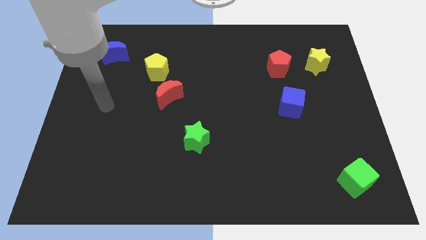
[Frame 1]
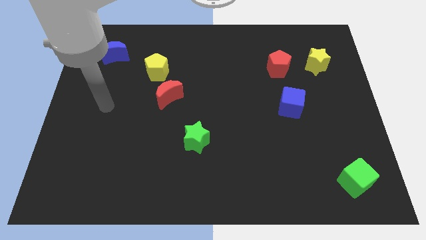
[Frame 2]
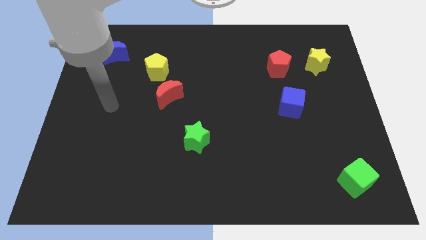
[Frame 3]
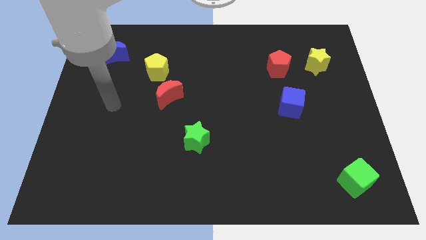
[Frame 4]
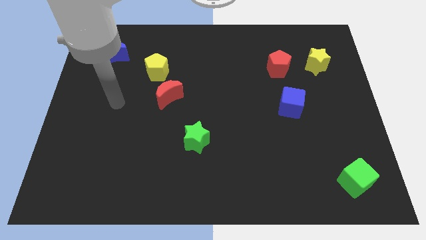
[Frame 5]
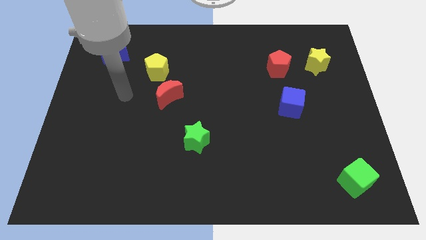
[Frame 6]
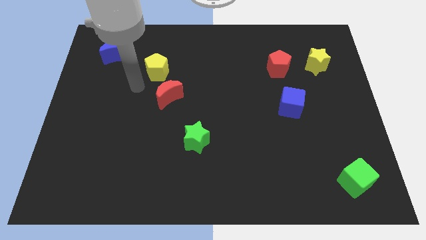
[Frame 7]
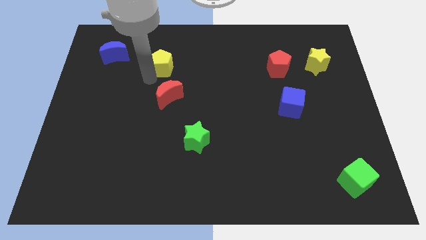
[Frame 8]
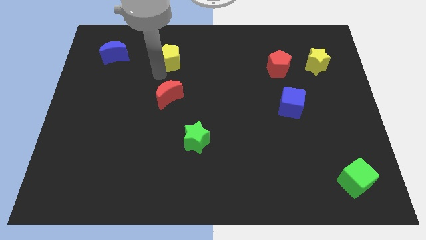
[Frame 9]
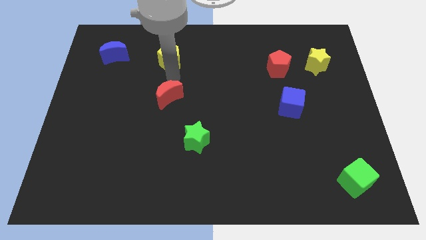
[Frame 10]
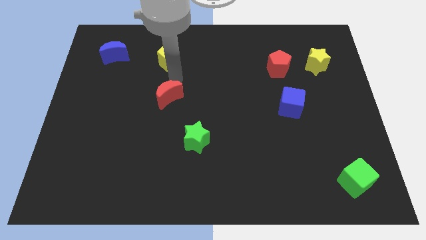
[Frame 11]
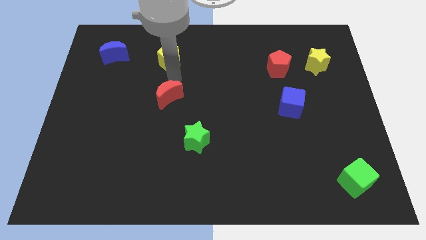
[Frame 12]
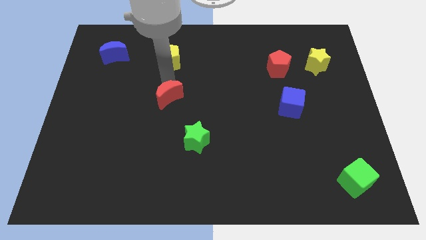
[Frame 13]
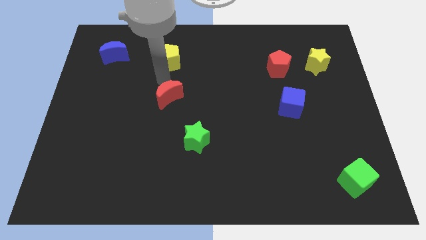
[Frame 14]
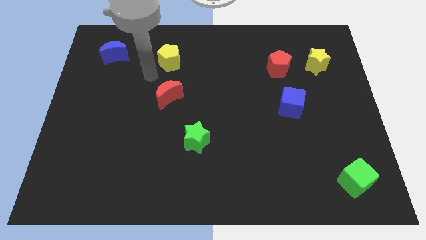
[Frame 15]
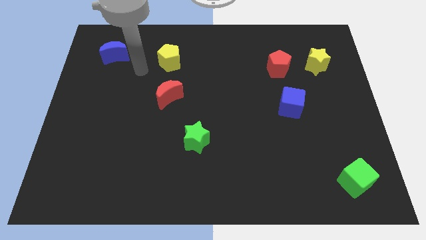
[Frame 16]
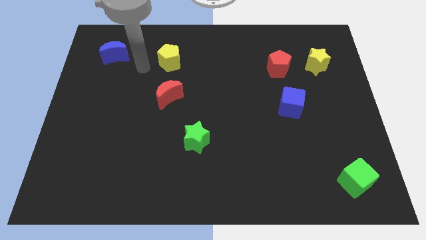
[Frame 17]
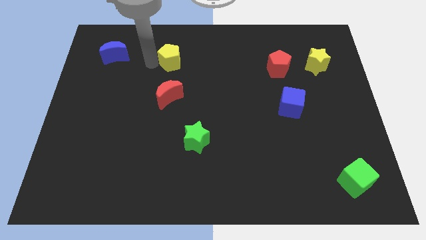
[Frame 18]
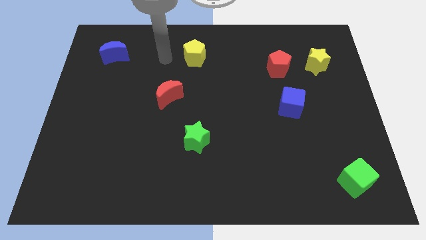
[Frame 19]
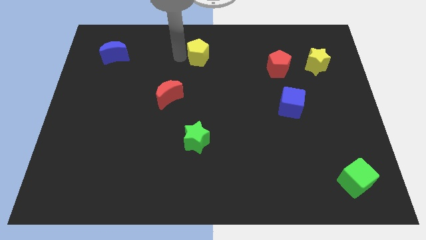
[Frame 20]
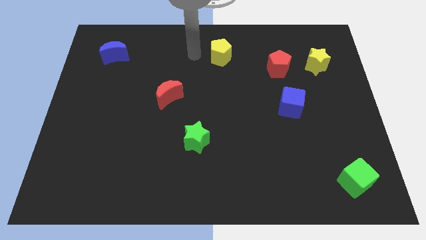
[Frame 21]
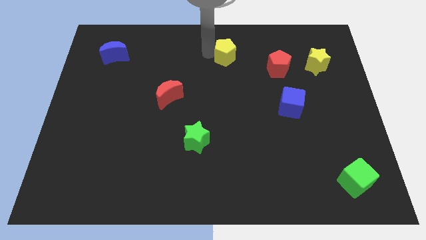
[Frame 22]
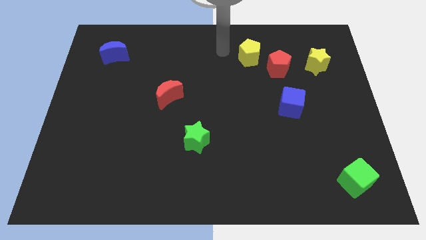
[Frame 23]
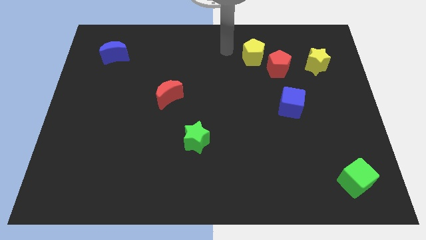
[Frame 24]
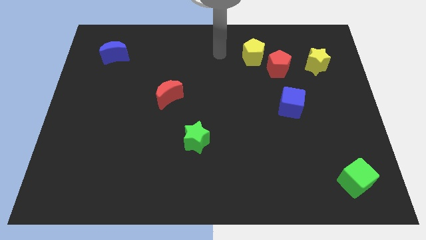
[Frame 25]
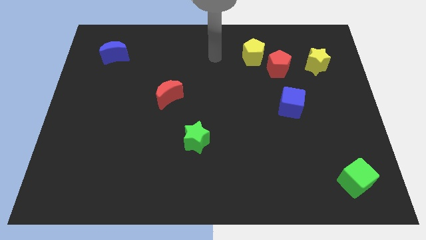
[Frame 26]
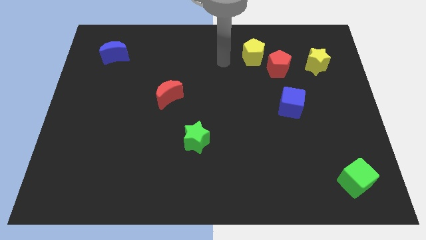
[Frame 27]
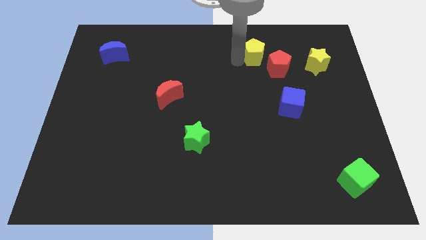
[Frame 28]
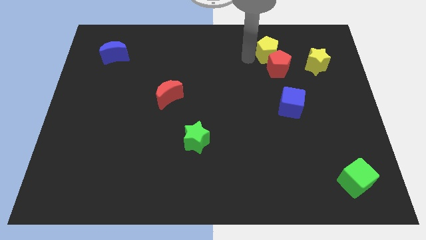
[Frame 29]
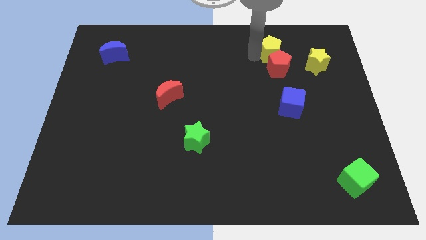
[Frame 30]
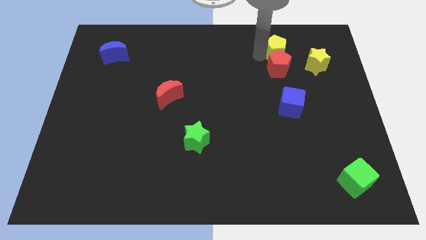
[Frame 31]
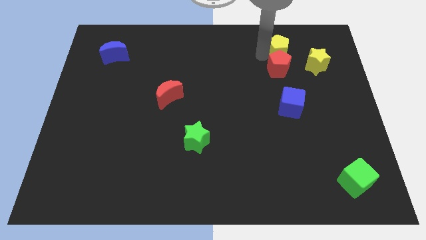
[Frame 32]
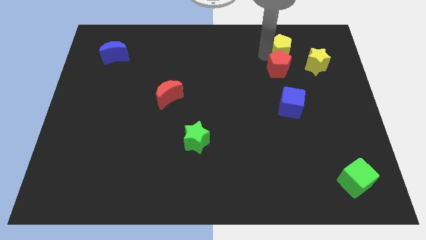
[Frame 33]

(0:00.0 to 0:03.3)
place yellow pentagon above red pentagon

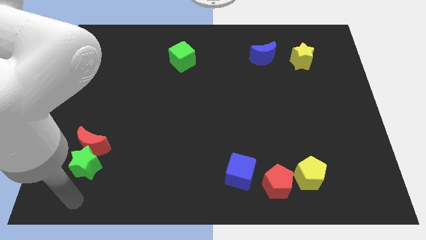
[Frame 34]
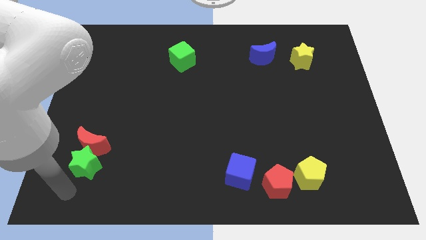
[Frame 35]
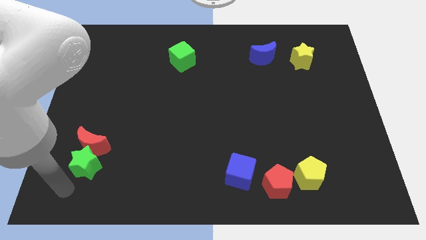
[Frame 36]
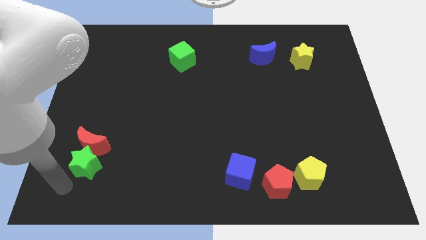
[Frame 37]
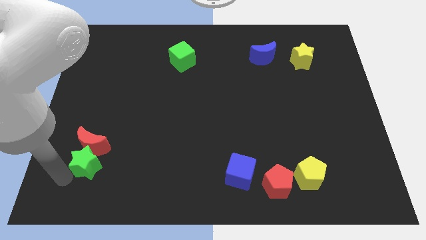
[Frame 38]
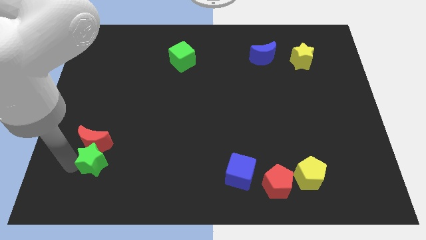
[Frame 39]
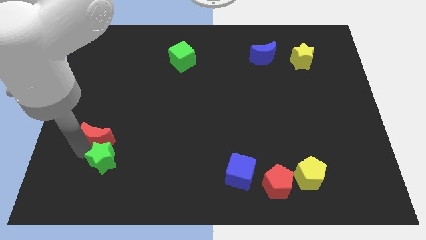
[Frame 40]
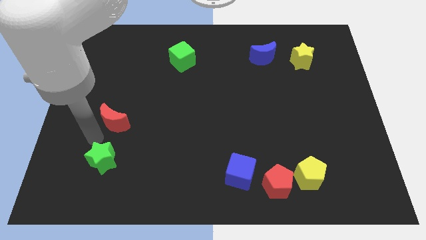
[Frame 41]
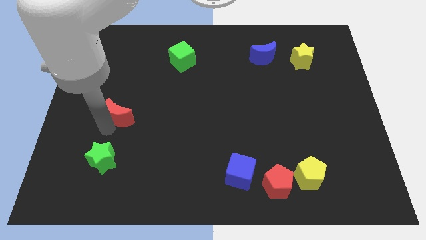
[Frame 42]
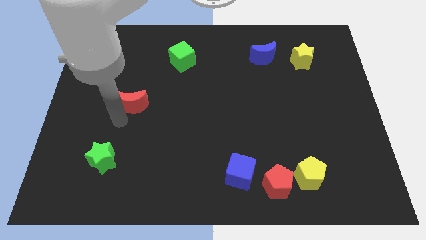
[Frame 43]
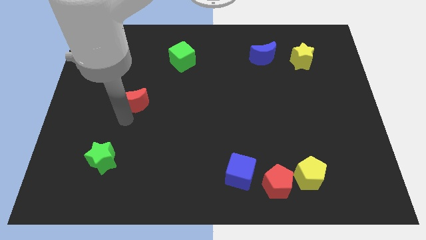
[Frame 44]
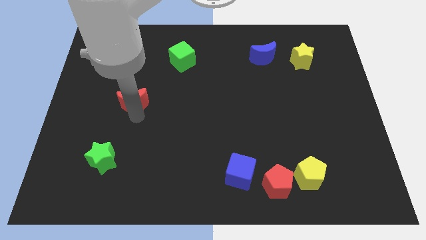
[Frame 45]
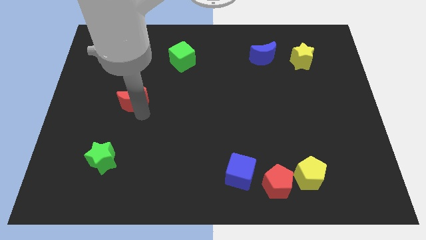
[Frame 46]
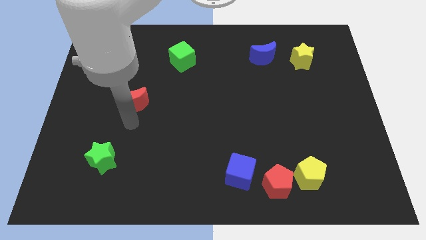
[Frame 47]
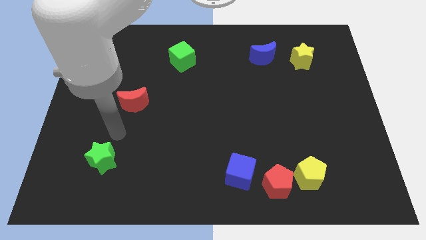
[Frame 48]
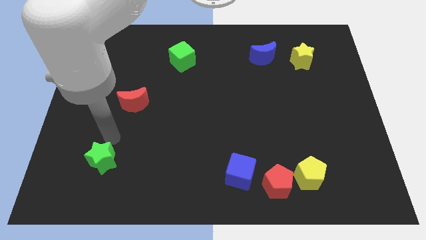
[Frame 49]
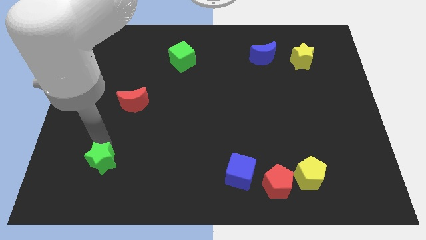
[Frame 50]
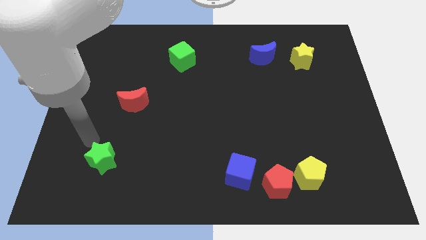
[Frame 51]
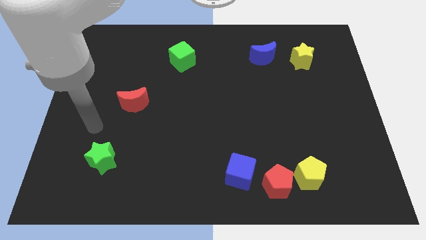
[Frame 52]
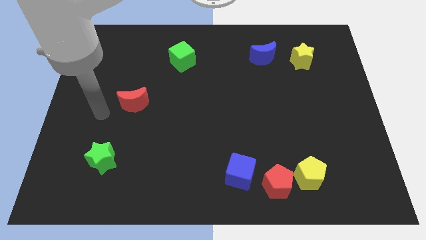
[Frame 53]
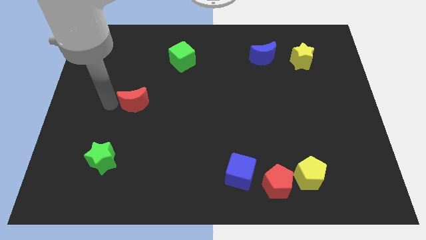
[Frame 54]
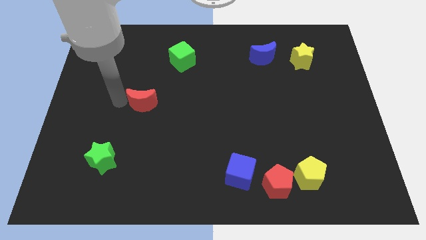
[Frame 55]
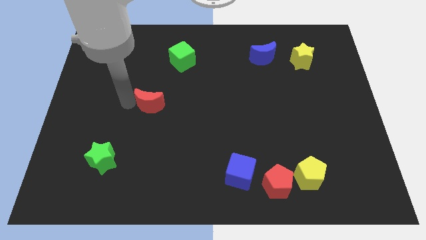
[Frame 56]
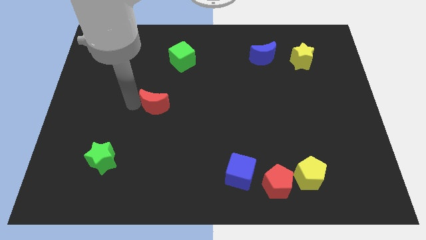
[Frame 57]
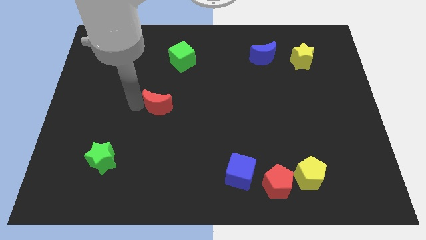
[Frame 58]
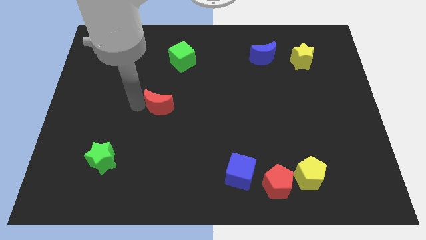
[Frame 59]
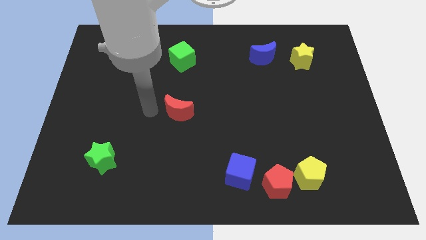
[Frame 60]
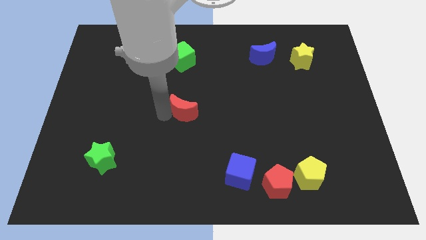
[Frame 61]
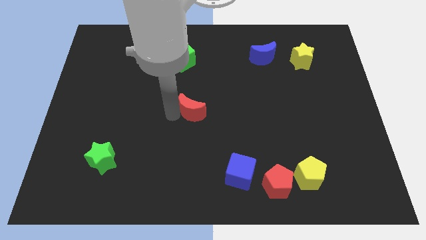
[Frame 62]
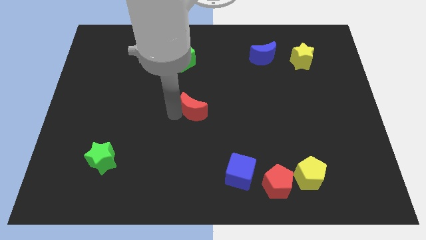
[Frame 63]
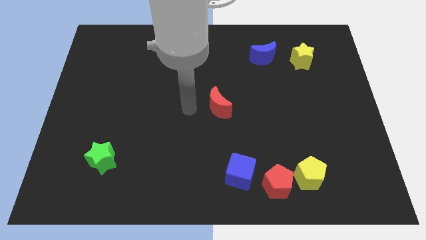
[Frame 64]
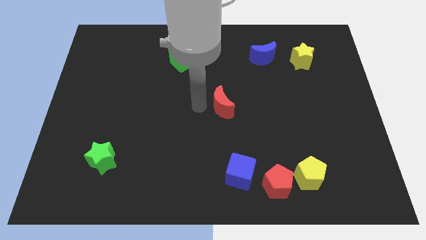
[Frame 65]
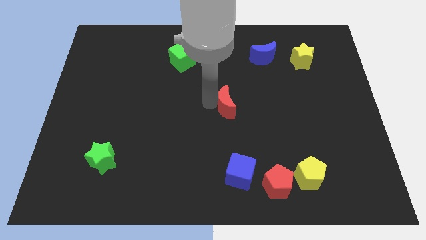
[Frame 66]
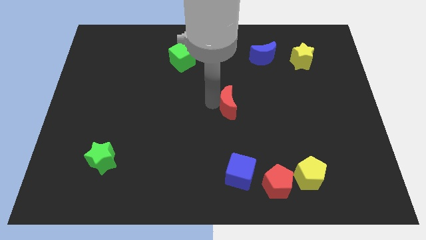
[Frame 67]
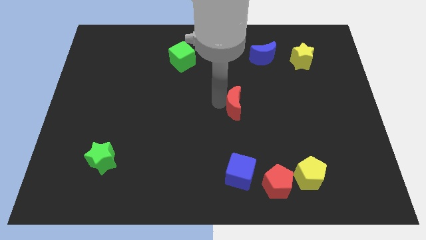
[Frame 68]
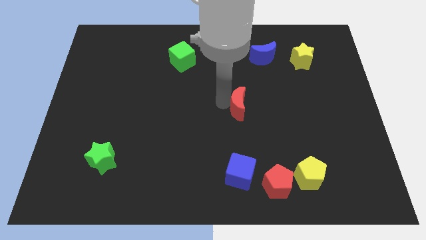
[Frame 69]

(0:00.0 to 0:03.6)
put the red crescent vertically above the blue cube

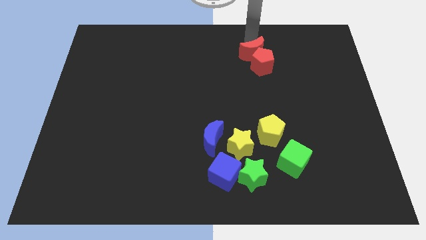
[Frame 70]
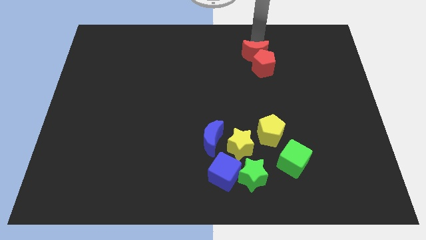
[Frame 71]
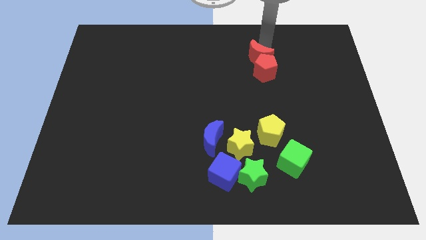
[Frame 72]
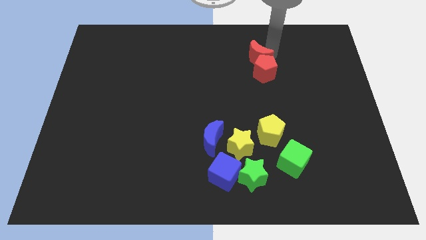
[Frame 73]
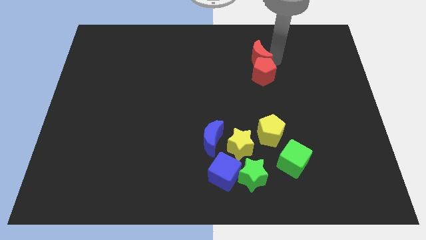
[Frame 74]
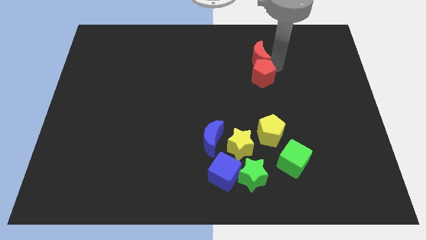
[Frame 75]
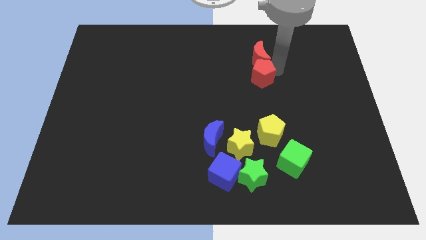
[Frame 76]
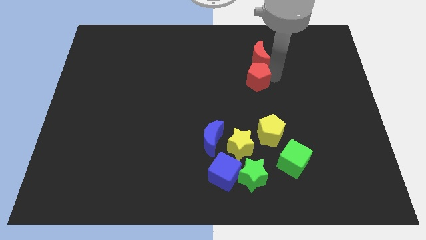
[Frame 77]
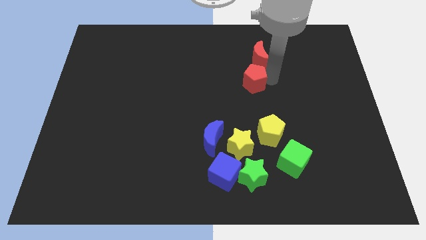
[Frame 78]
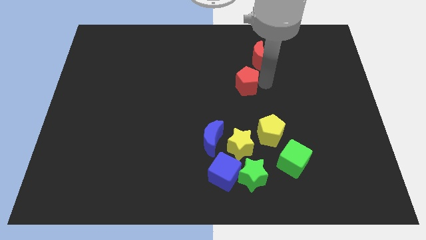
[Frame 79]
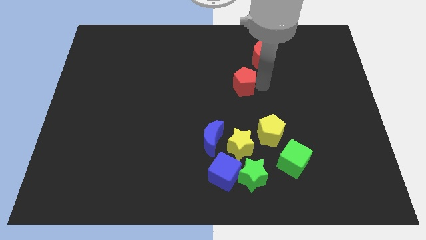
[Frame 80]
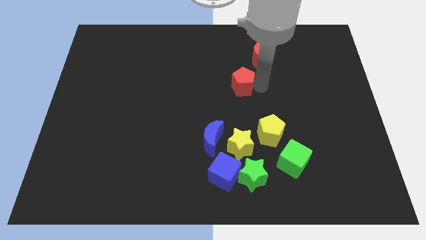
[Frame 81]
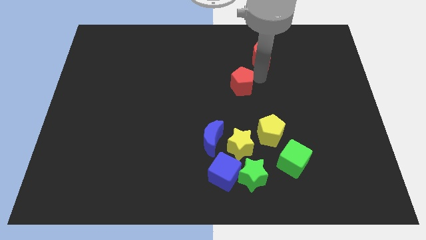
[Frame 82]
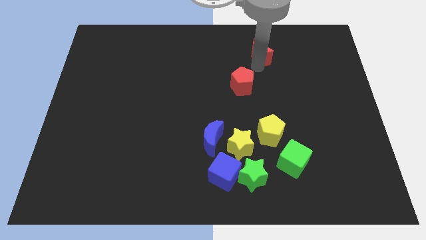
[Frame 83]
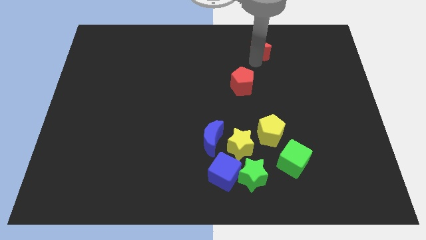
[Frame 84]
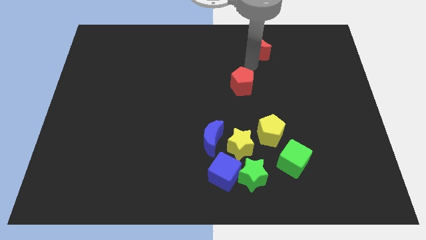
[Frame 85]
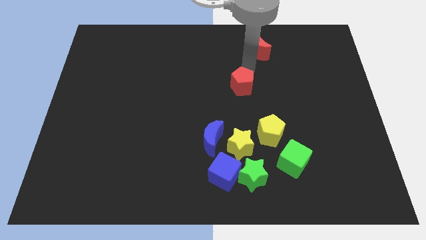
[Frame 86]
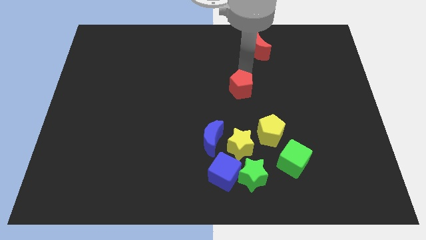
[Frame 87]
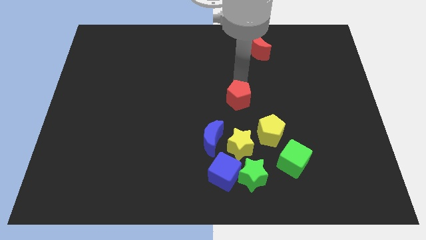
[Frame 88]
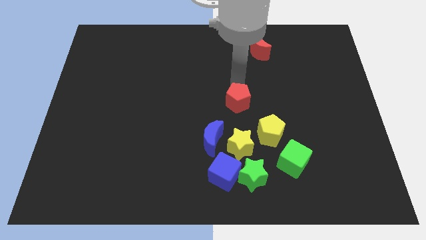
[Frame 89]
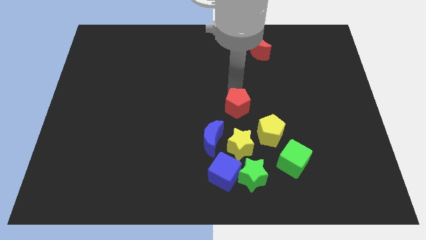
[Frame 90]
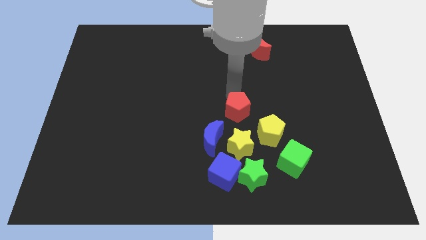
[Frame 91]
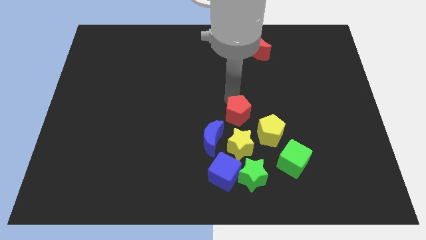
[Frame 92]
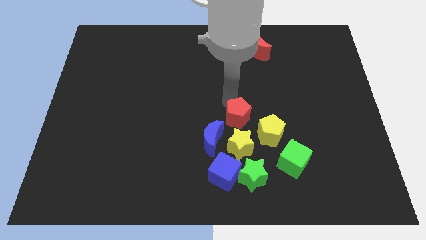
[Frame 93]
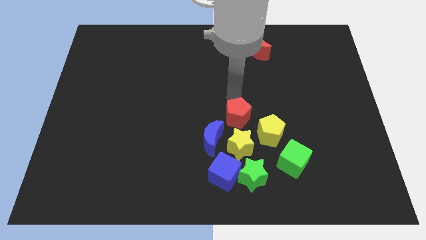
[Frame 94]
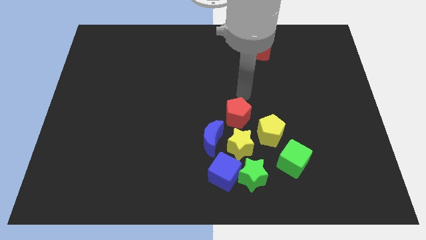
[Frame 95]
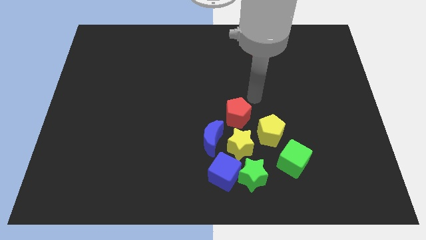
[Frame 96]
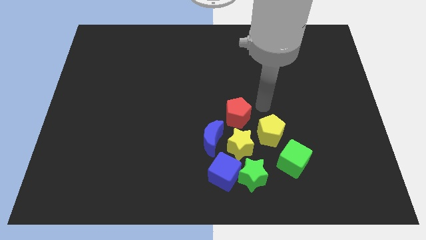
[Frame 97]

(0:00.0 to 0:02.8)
place red pentagon to the top of yellow star
